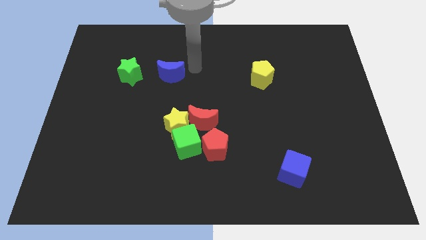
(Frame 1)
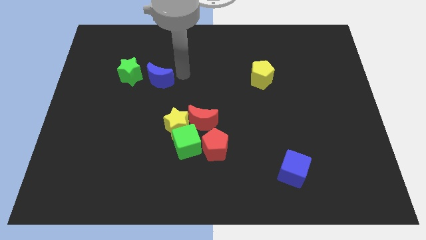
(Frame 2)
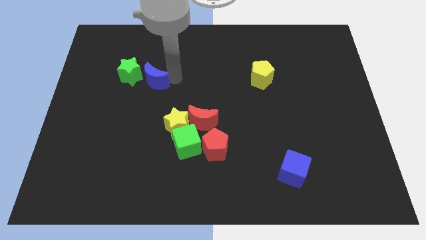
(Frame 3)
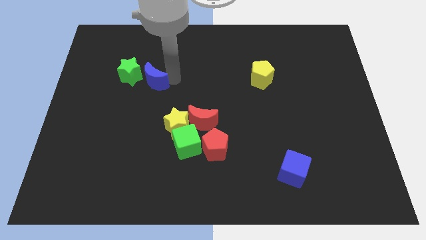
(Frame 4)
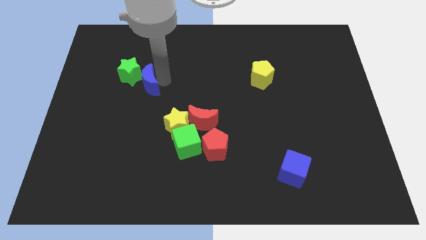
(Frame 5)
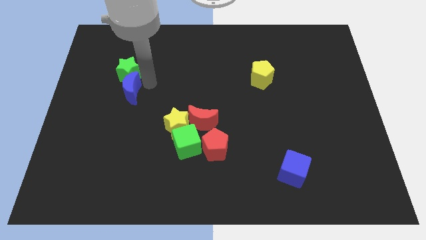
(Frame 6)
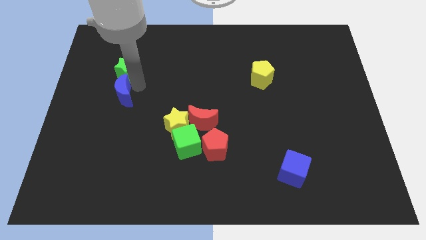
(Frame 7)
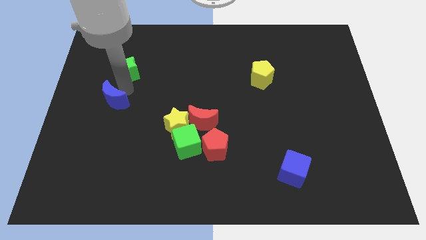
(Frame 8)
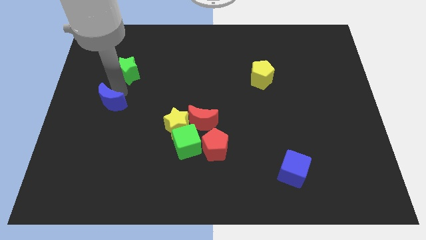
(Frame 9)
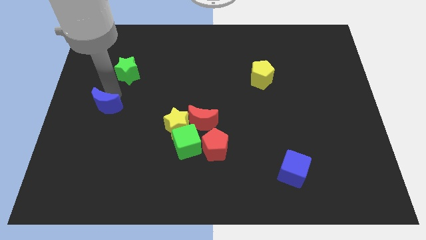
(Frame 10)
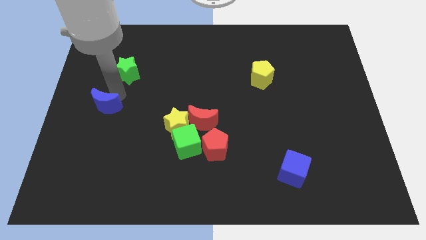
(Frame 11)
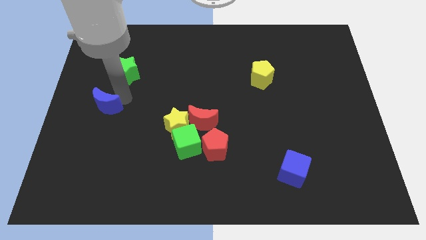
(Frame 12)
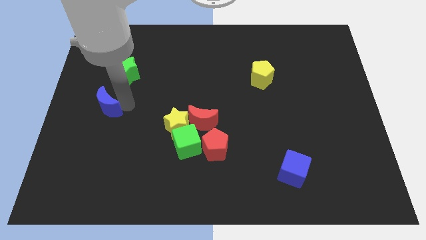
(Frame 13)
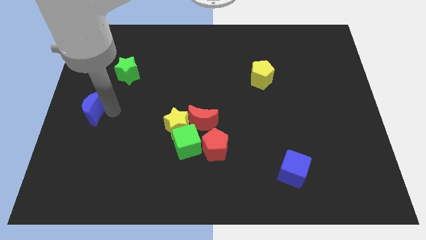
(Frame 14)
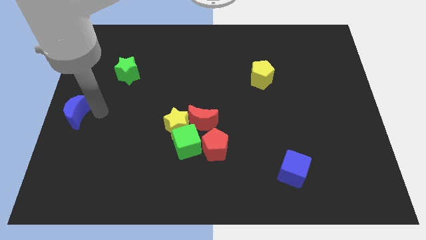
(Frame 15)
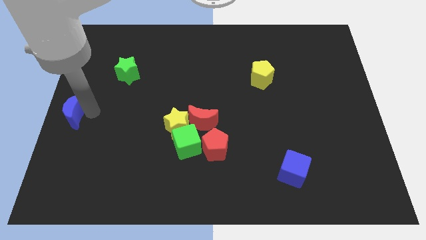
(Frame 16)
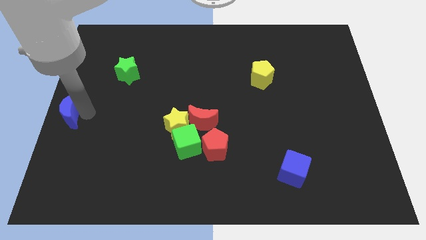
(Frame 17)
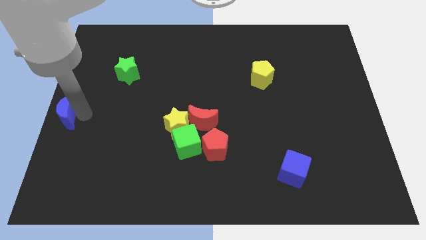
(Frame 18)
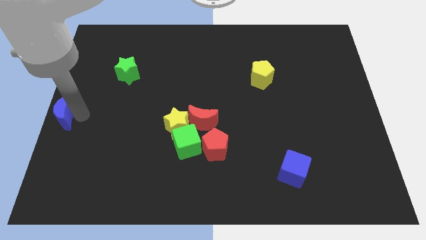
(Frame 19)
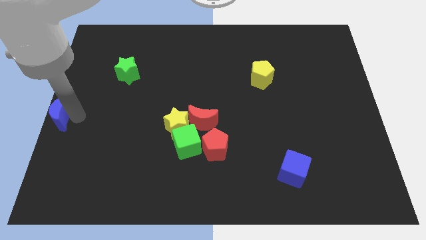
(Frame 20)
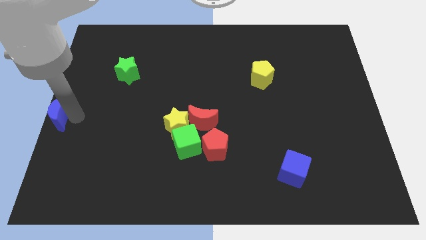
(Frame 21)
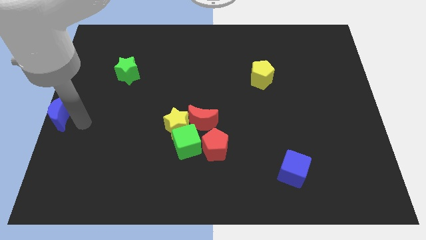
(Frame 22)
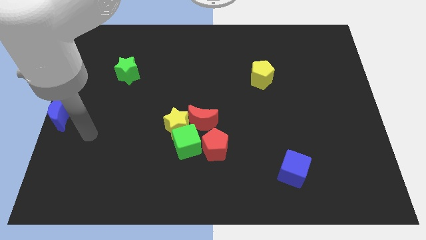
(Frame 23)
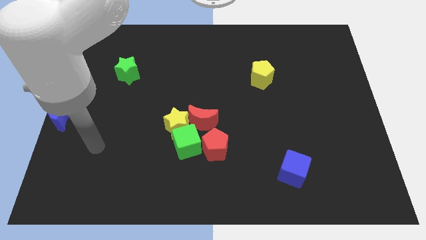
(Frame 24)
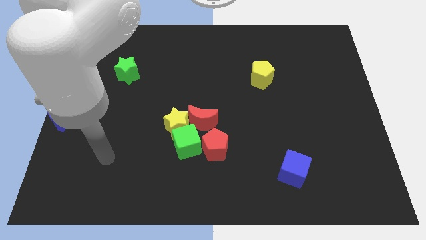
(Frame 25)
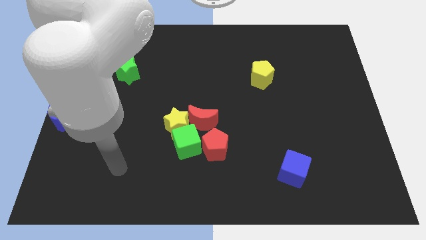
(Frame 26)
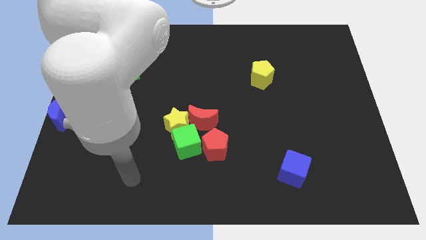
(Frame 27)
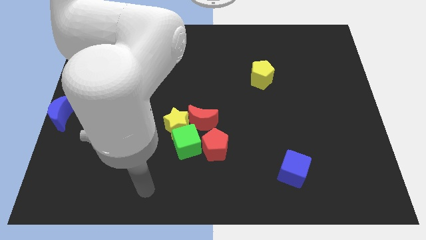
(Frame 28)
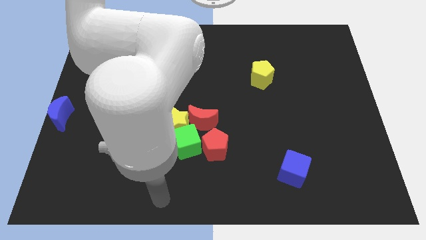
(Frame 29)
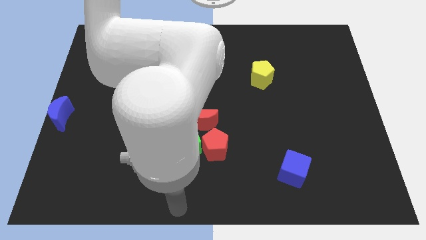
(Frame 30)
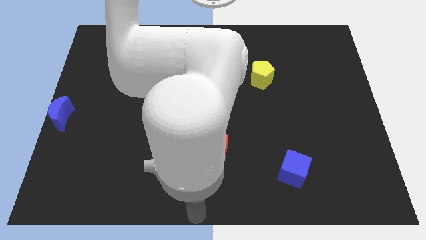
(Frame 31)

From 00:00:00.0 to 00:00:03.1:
move blue moon to the center left

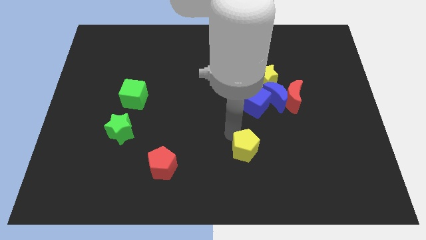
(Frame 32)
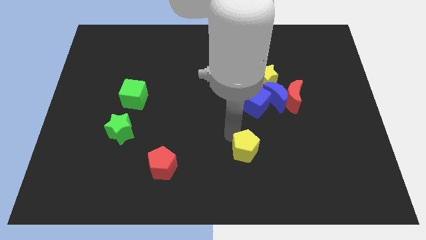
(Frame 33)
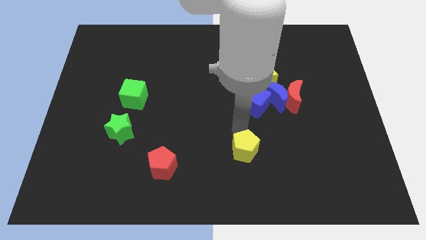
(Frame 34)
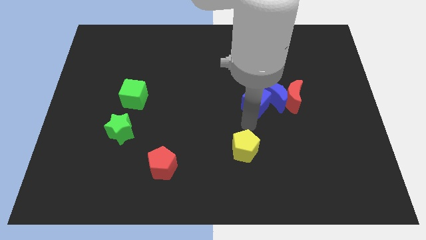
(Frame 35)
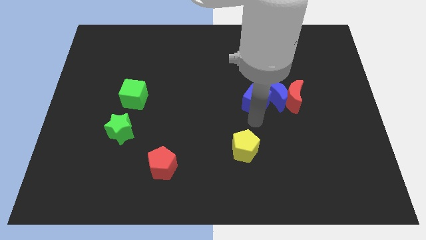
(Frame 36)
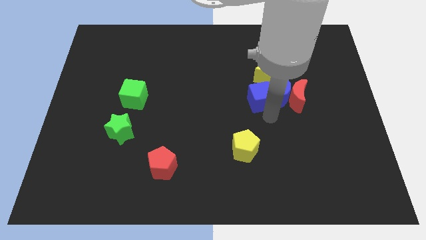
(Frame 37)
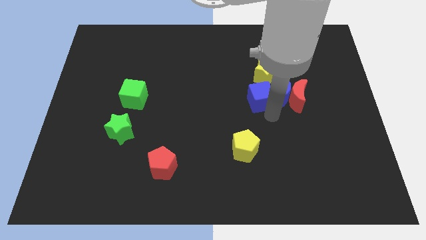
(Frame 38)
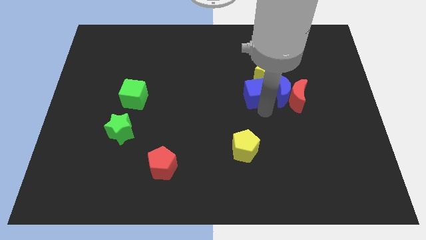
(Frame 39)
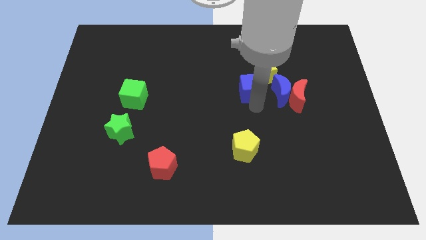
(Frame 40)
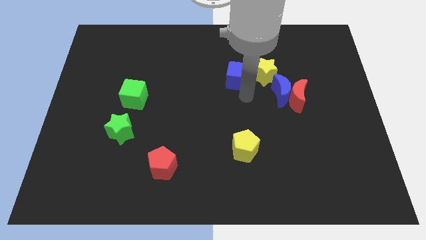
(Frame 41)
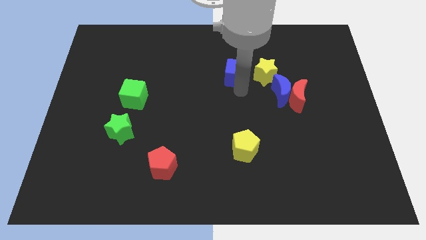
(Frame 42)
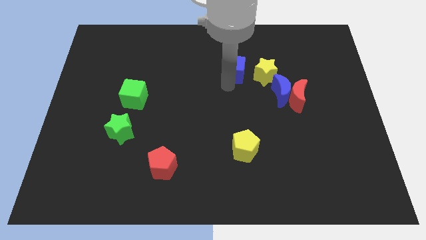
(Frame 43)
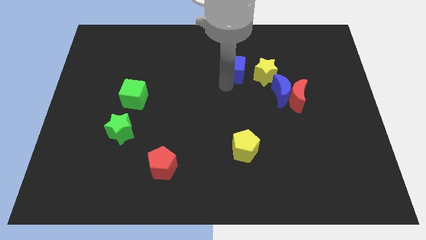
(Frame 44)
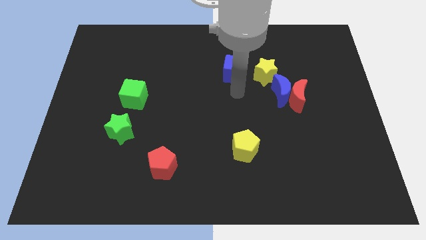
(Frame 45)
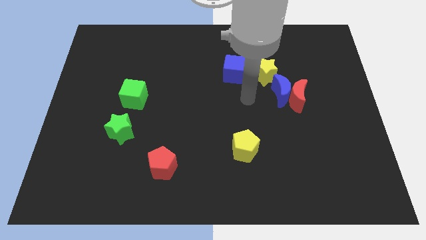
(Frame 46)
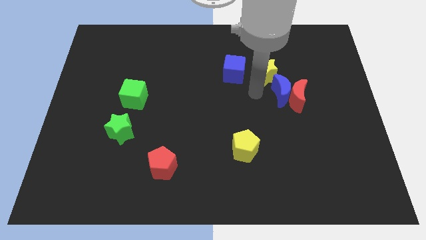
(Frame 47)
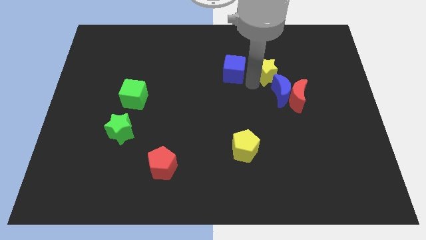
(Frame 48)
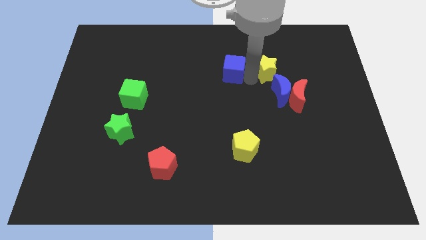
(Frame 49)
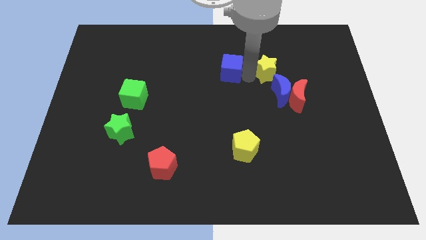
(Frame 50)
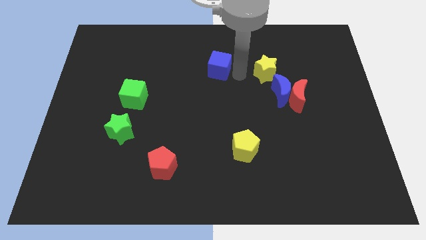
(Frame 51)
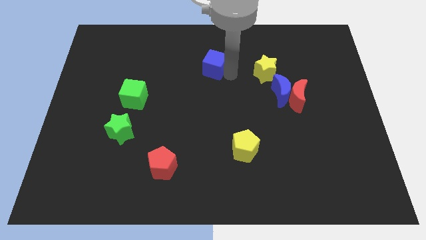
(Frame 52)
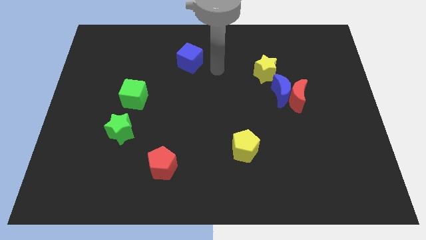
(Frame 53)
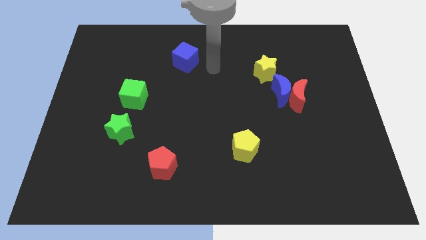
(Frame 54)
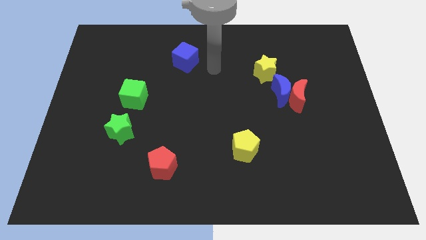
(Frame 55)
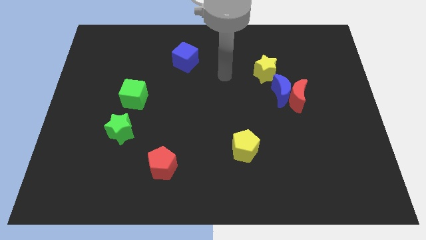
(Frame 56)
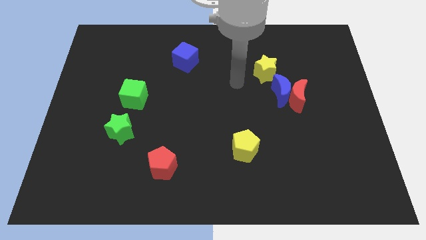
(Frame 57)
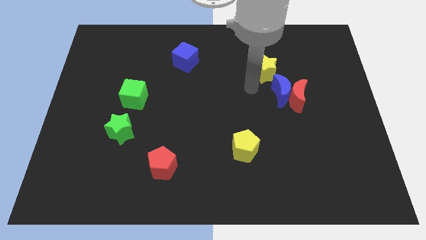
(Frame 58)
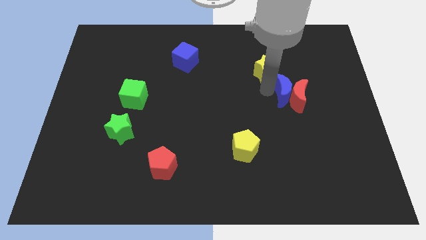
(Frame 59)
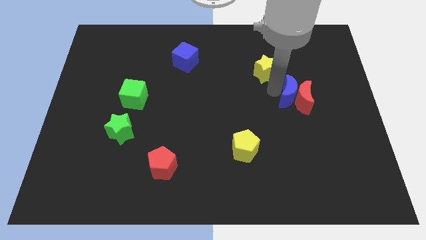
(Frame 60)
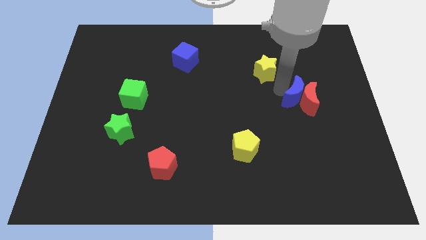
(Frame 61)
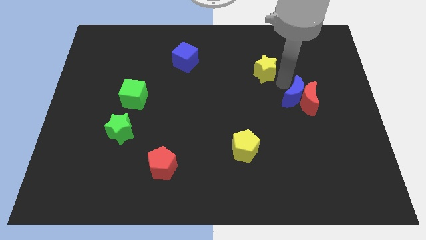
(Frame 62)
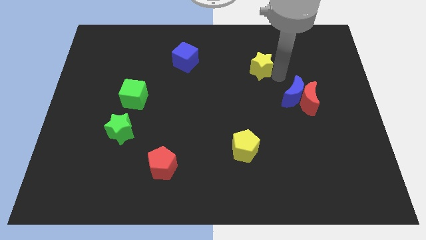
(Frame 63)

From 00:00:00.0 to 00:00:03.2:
move the blue cube diagonally right to the green cube

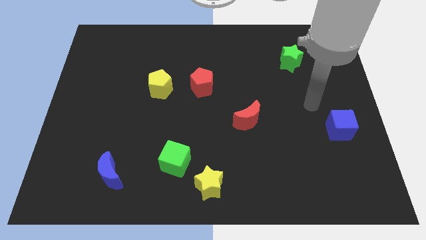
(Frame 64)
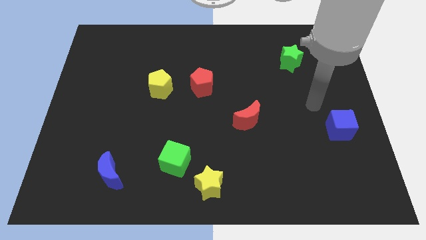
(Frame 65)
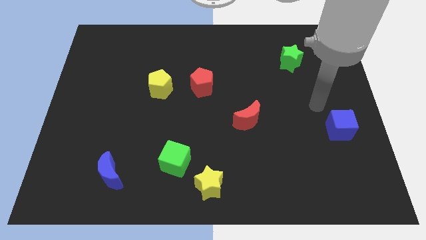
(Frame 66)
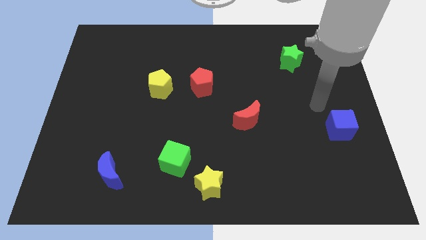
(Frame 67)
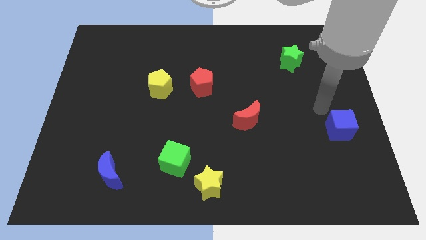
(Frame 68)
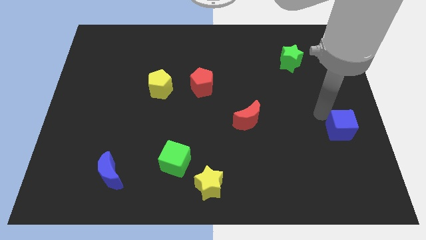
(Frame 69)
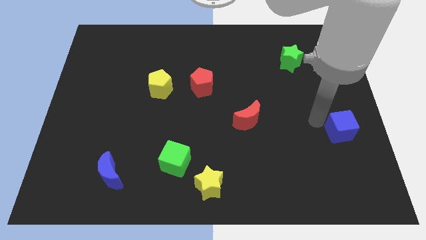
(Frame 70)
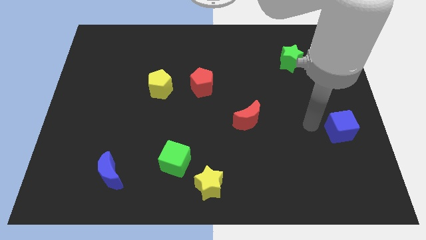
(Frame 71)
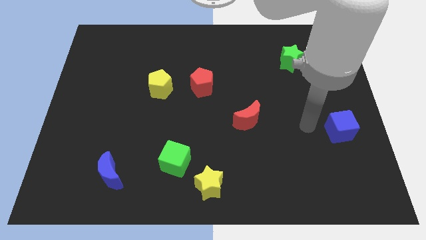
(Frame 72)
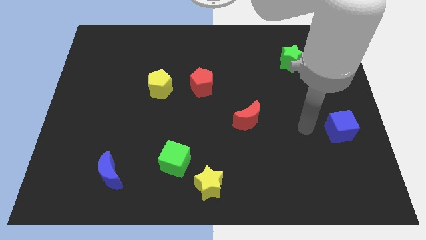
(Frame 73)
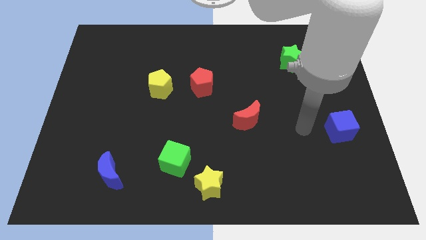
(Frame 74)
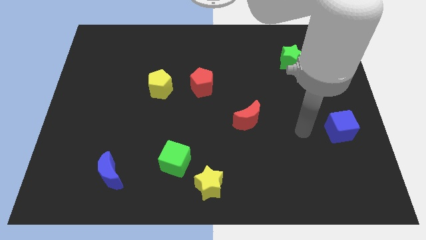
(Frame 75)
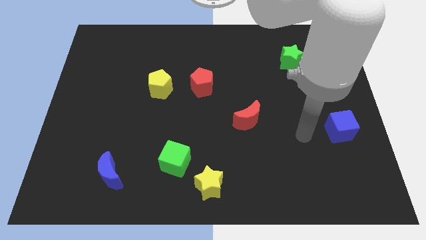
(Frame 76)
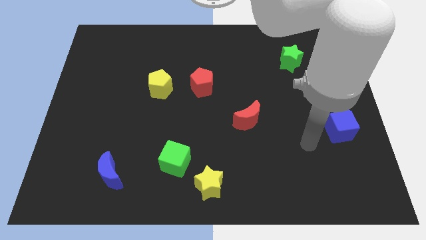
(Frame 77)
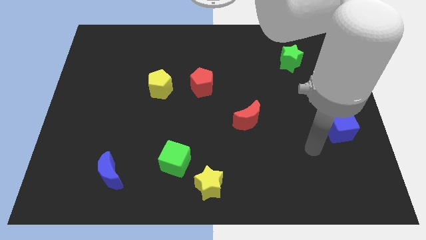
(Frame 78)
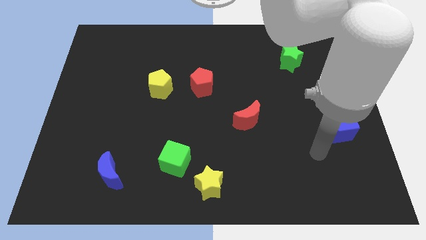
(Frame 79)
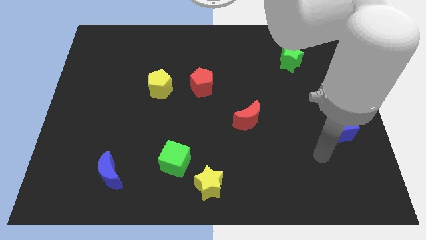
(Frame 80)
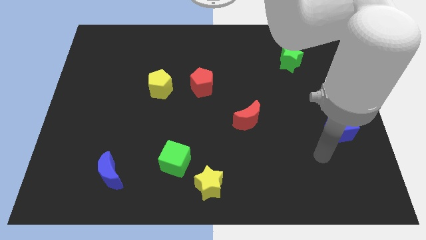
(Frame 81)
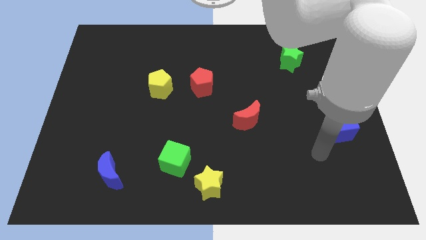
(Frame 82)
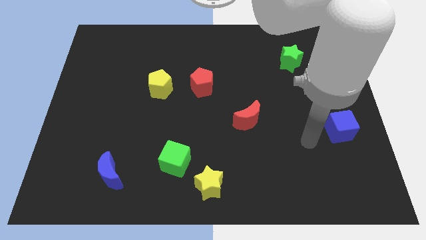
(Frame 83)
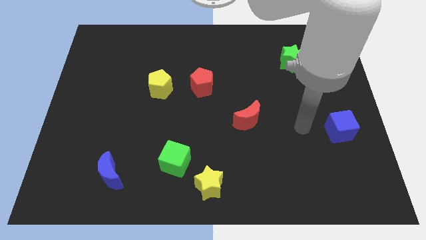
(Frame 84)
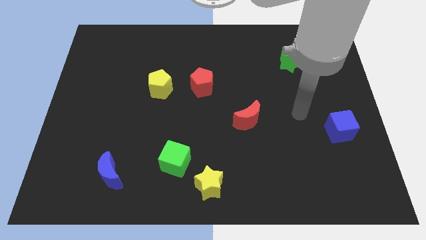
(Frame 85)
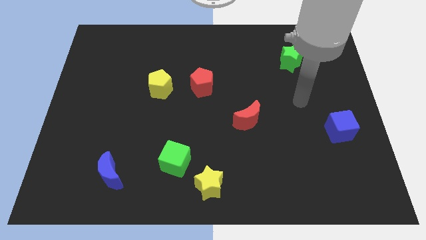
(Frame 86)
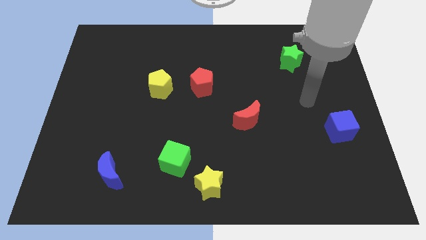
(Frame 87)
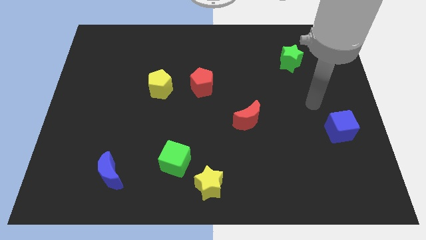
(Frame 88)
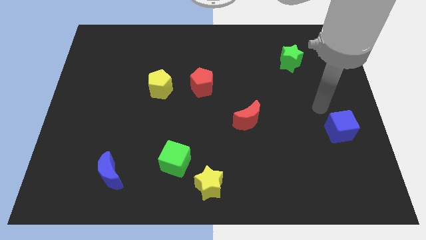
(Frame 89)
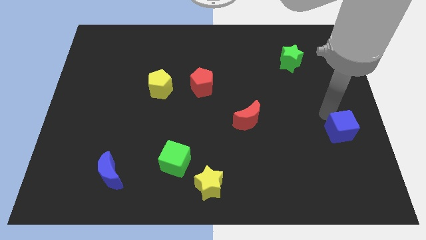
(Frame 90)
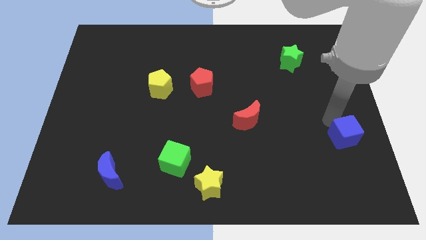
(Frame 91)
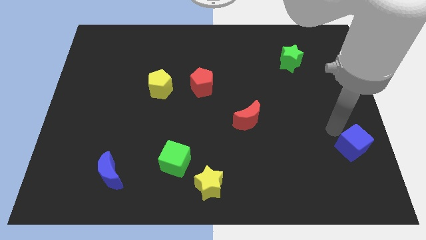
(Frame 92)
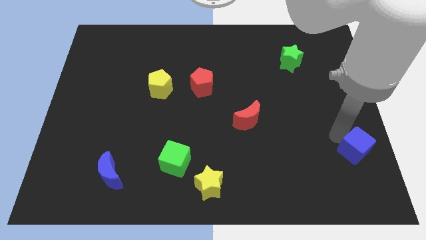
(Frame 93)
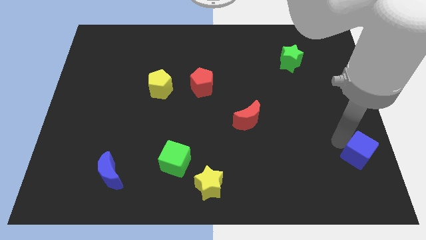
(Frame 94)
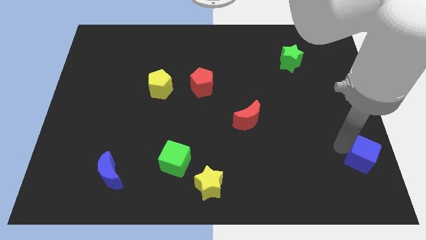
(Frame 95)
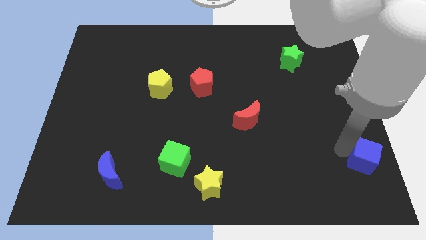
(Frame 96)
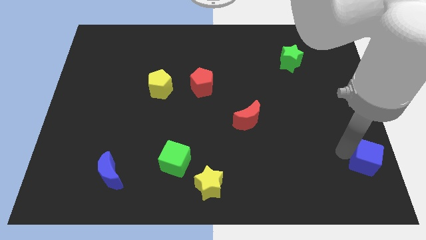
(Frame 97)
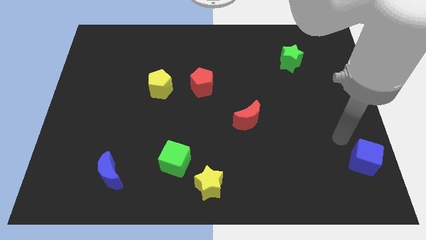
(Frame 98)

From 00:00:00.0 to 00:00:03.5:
push the blue cube to the bottom right of the board
